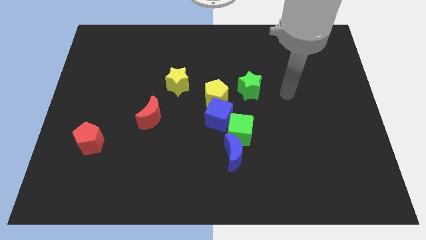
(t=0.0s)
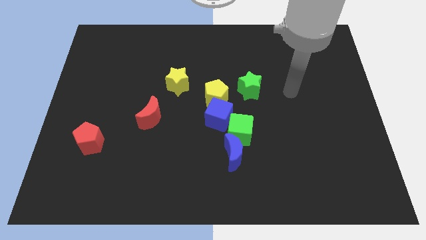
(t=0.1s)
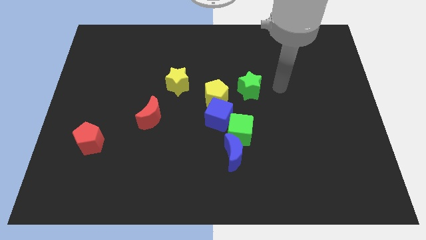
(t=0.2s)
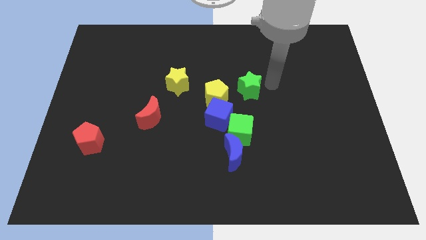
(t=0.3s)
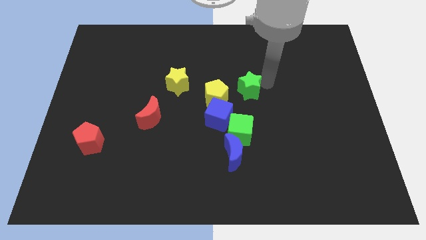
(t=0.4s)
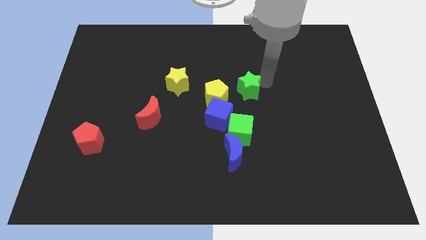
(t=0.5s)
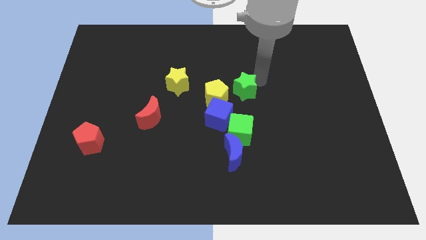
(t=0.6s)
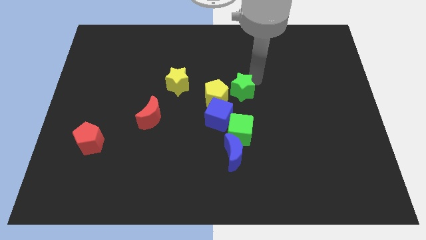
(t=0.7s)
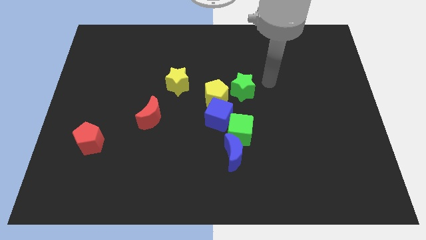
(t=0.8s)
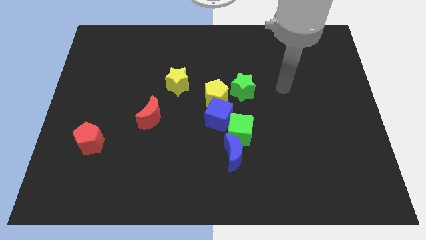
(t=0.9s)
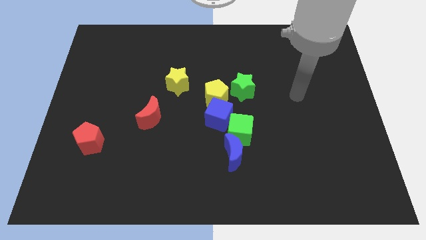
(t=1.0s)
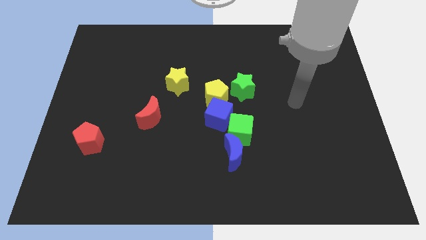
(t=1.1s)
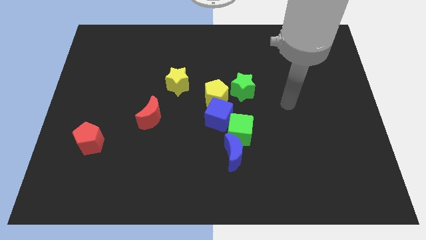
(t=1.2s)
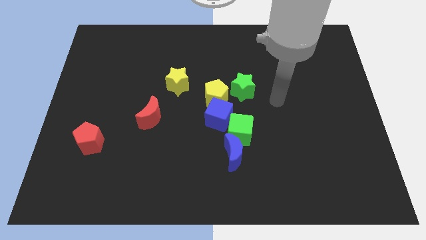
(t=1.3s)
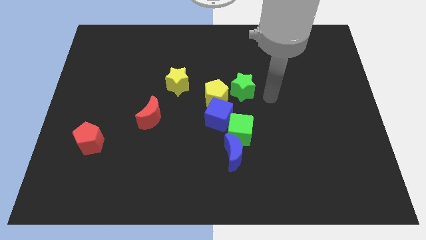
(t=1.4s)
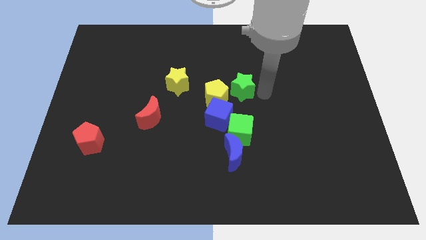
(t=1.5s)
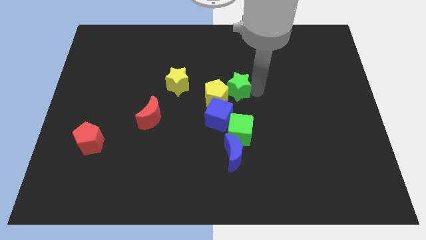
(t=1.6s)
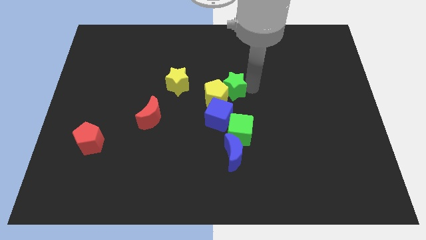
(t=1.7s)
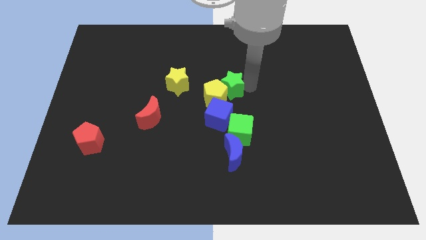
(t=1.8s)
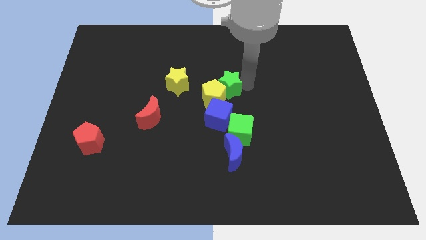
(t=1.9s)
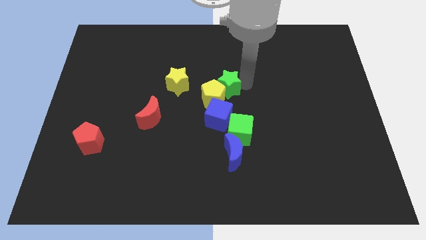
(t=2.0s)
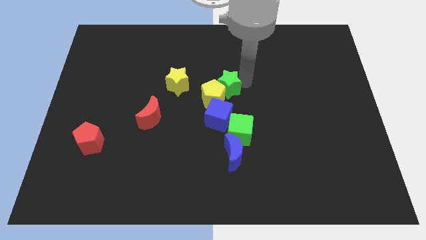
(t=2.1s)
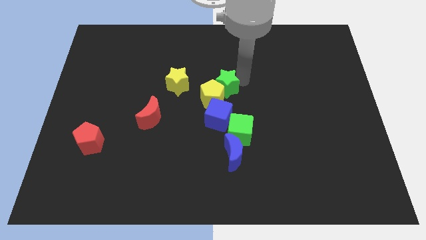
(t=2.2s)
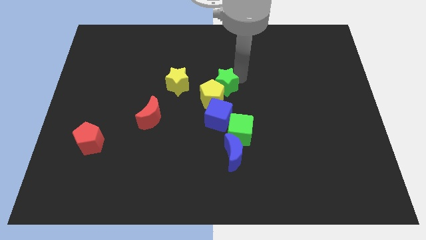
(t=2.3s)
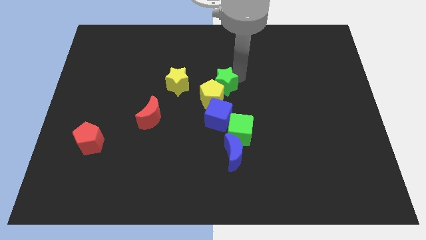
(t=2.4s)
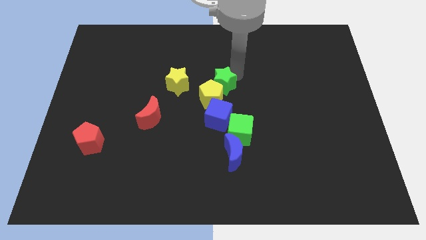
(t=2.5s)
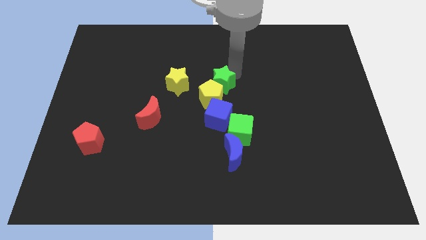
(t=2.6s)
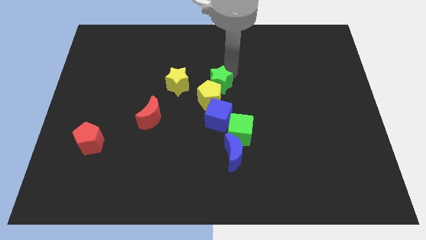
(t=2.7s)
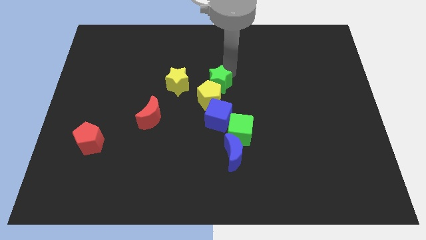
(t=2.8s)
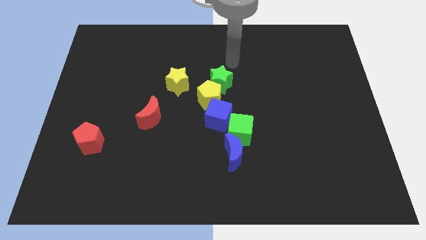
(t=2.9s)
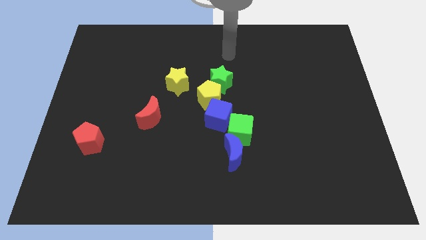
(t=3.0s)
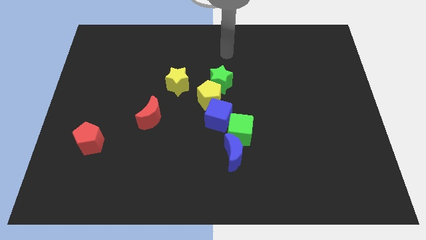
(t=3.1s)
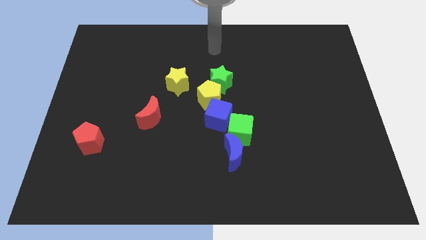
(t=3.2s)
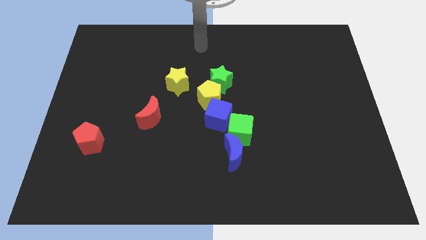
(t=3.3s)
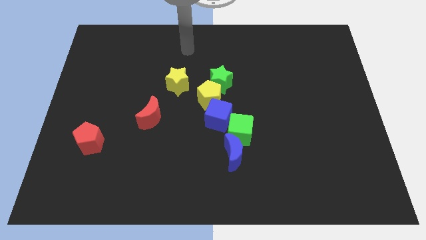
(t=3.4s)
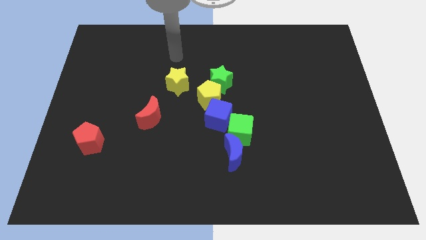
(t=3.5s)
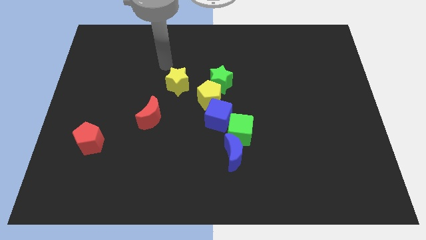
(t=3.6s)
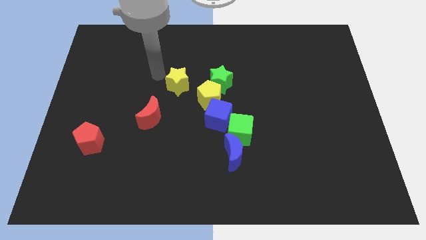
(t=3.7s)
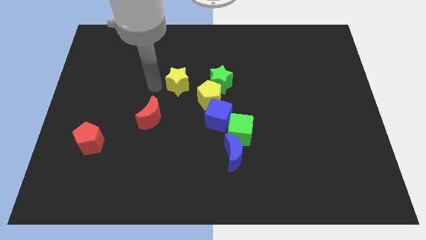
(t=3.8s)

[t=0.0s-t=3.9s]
push the green star slightly to the top side of yellow pentagon

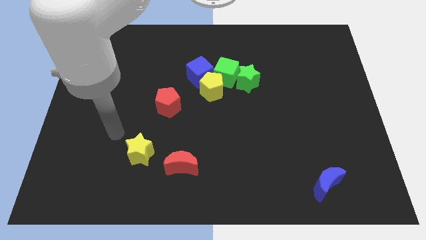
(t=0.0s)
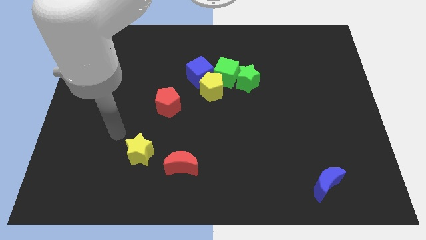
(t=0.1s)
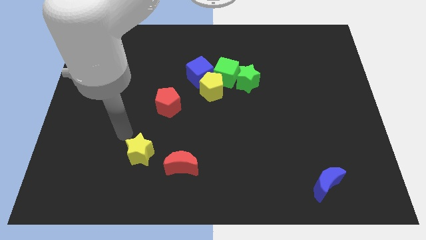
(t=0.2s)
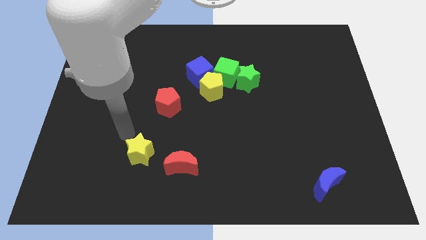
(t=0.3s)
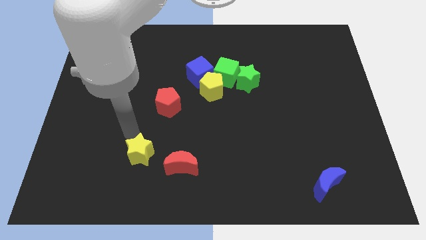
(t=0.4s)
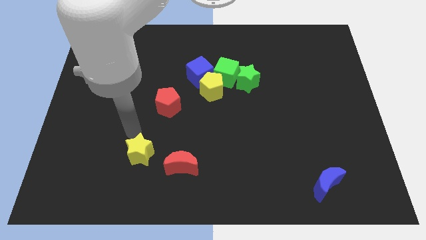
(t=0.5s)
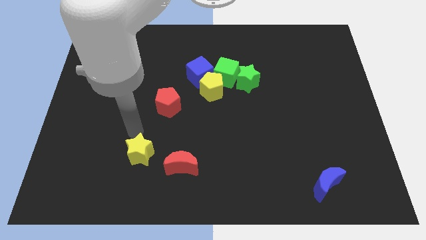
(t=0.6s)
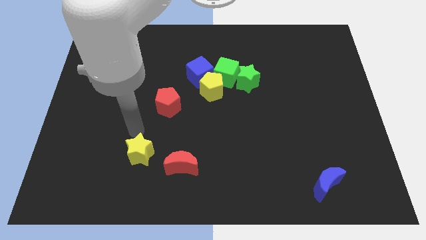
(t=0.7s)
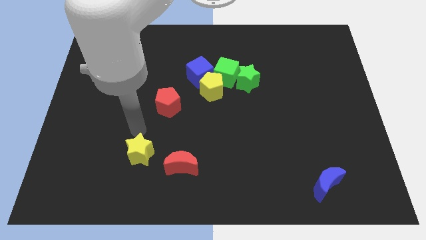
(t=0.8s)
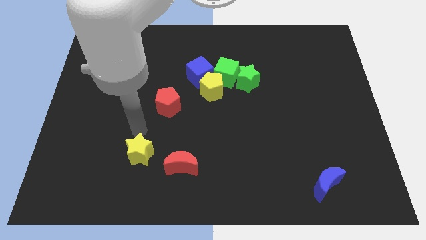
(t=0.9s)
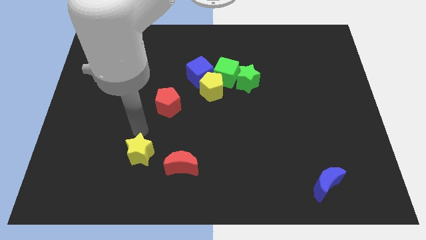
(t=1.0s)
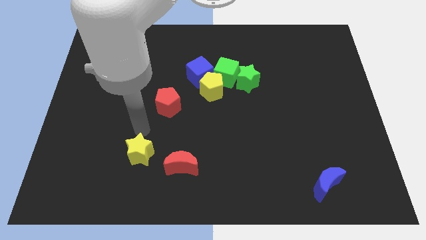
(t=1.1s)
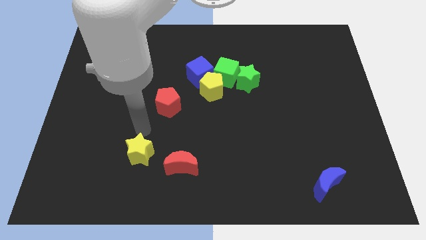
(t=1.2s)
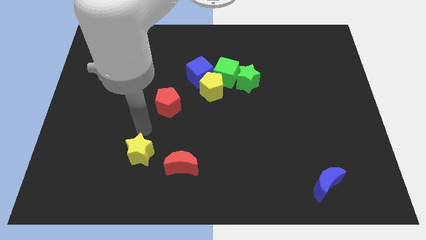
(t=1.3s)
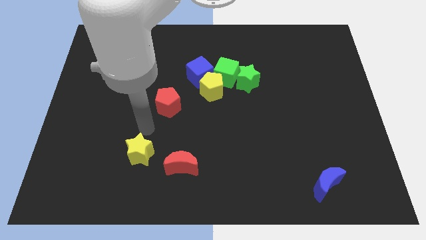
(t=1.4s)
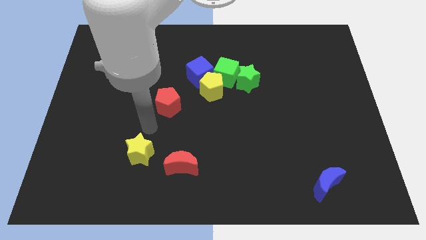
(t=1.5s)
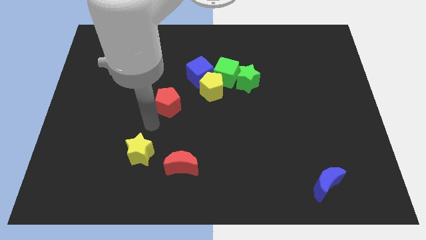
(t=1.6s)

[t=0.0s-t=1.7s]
place your hand in between the red pentagon and yellow star

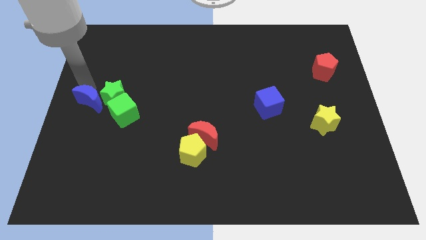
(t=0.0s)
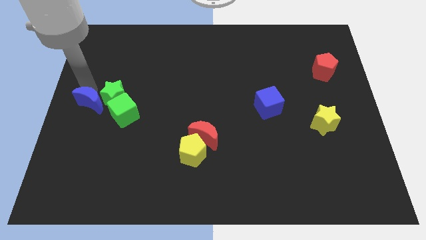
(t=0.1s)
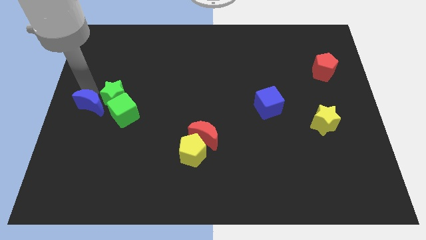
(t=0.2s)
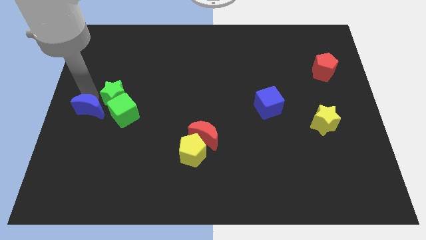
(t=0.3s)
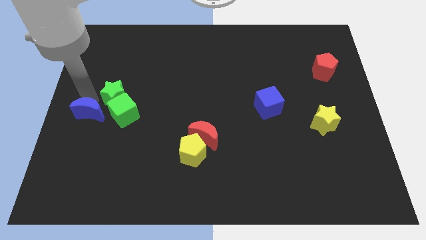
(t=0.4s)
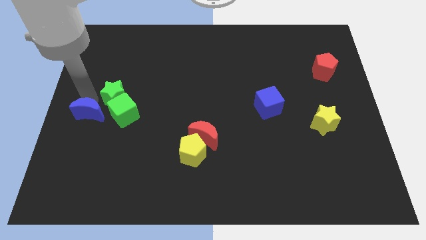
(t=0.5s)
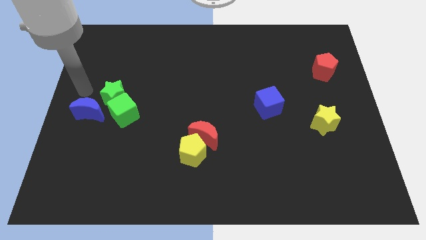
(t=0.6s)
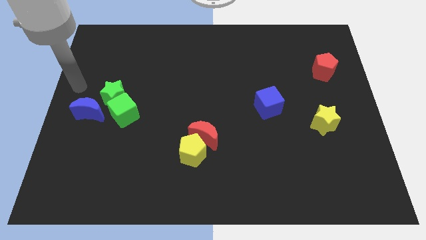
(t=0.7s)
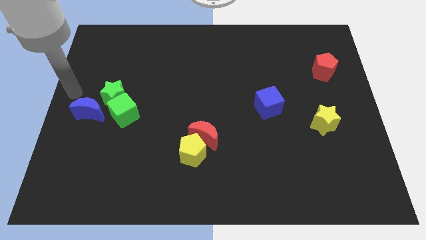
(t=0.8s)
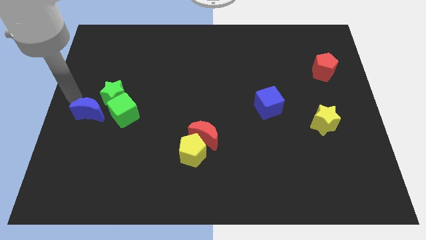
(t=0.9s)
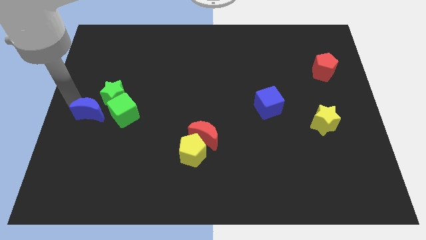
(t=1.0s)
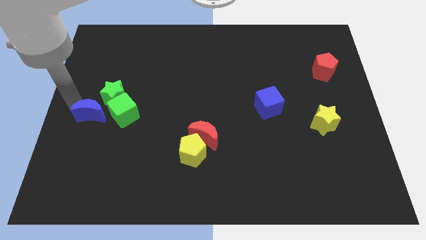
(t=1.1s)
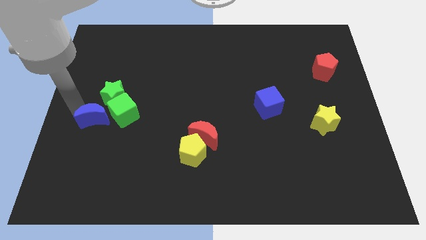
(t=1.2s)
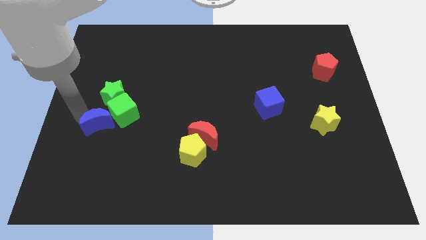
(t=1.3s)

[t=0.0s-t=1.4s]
place the blue moon to the left of the green cube

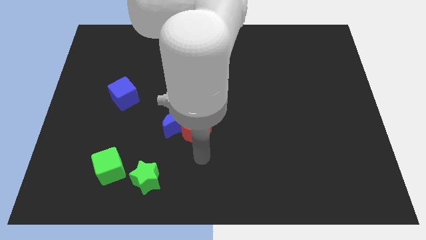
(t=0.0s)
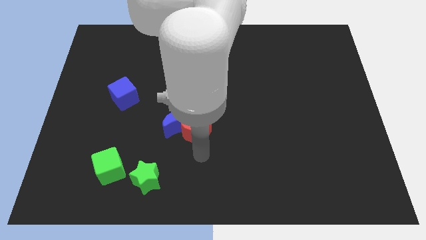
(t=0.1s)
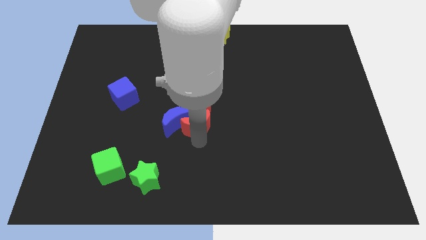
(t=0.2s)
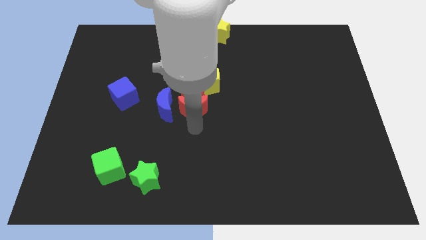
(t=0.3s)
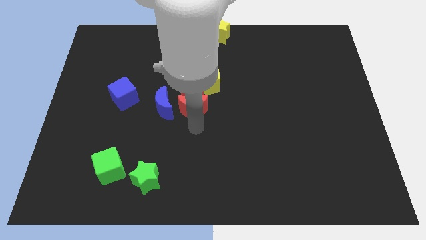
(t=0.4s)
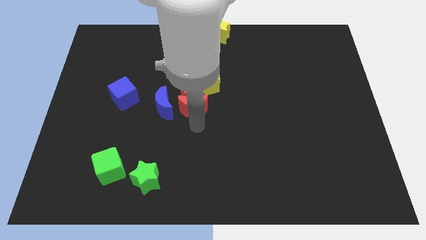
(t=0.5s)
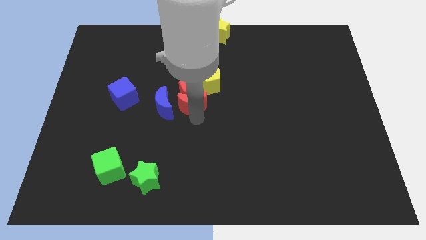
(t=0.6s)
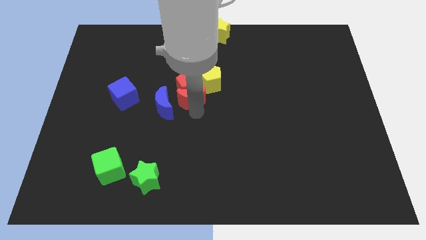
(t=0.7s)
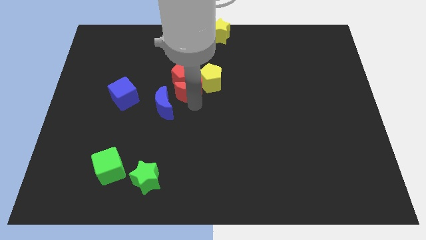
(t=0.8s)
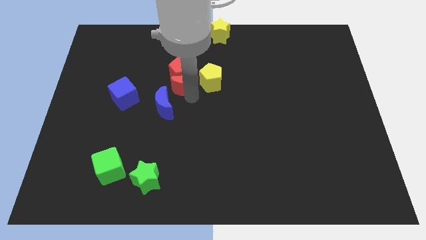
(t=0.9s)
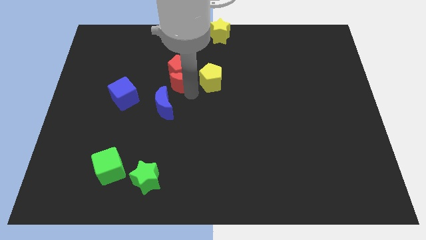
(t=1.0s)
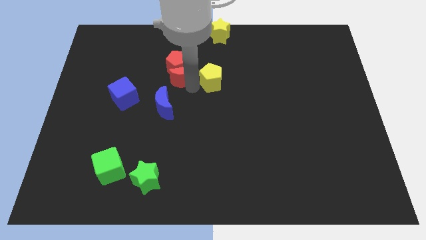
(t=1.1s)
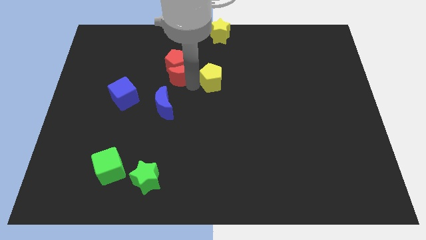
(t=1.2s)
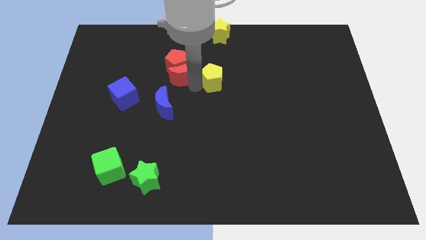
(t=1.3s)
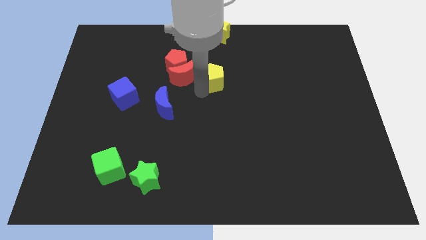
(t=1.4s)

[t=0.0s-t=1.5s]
push the red crescent into the red pentagon

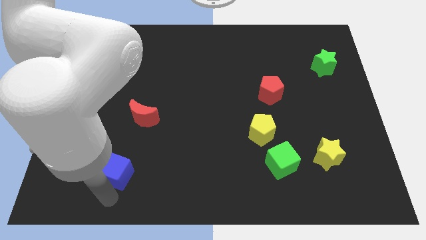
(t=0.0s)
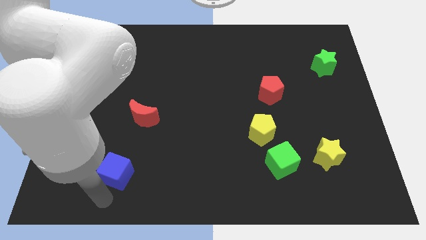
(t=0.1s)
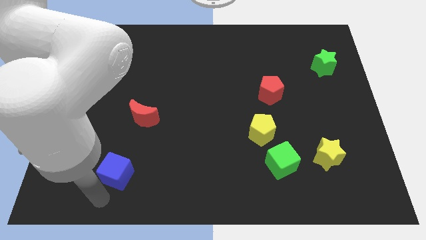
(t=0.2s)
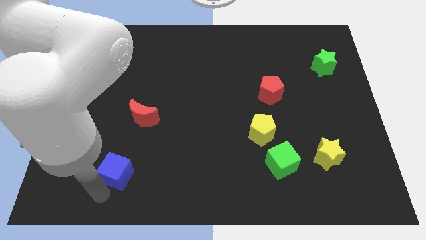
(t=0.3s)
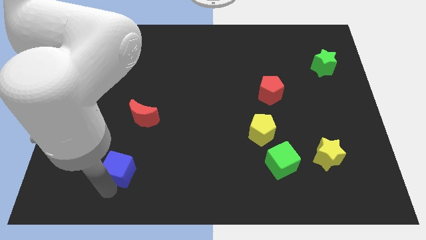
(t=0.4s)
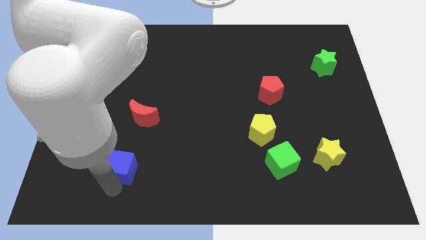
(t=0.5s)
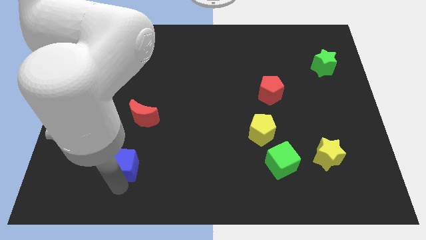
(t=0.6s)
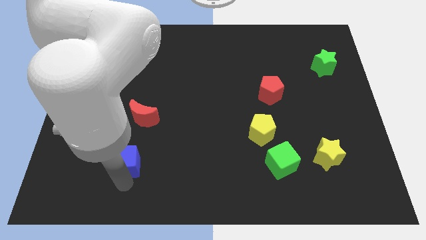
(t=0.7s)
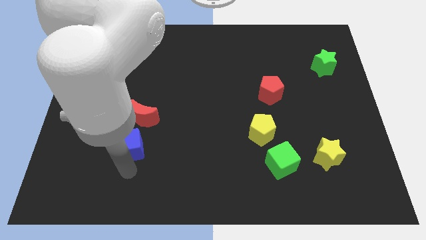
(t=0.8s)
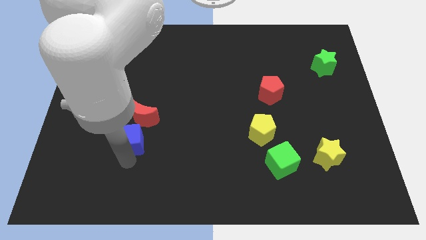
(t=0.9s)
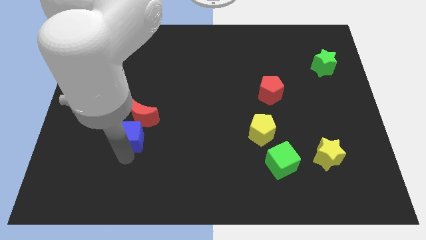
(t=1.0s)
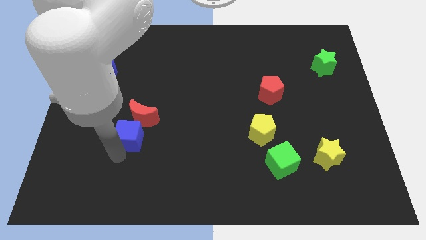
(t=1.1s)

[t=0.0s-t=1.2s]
push the blue cube towards the red moon
